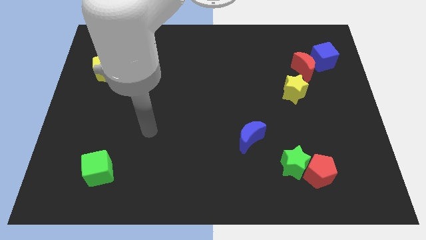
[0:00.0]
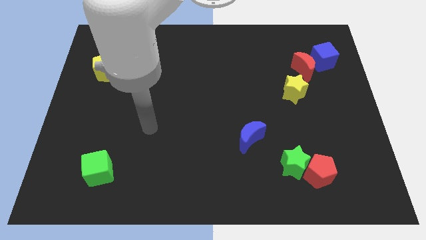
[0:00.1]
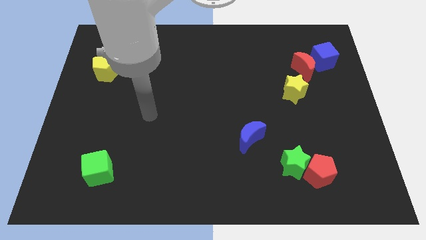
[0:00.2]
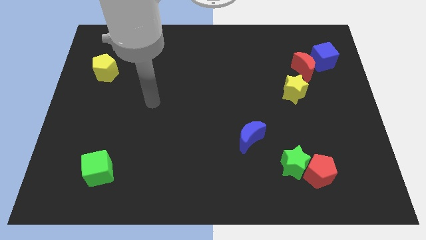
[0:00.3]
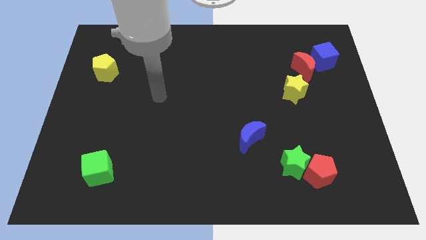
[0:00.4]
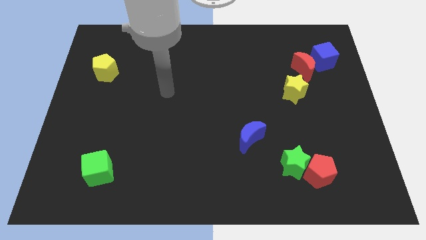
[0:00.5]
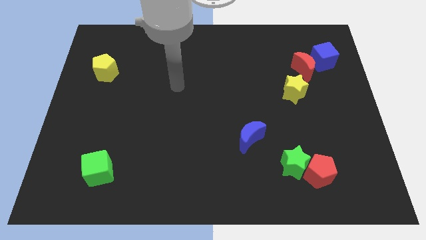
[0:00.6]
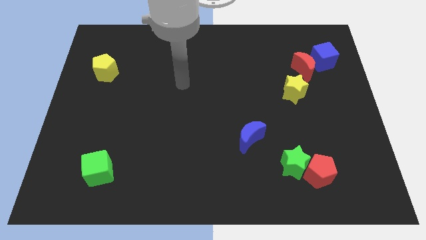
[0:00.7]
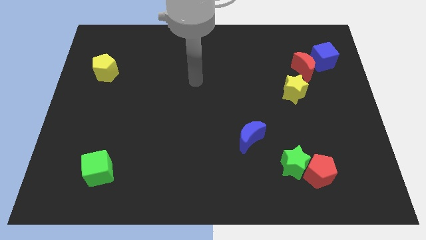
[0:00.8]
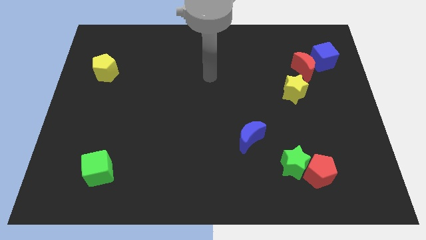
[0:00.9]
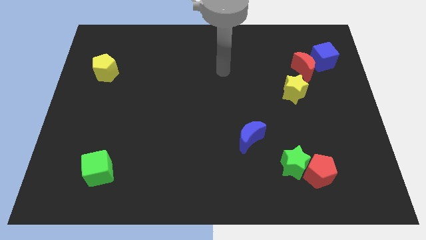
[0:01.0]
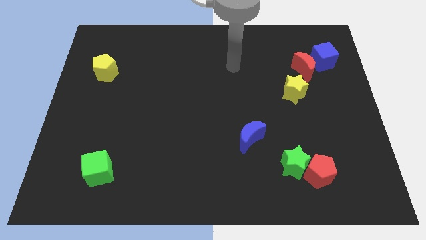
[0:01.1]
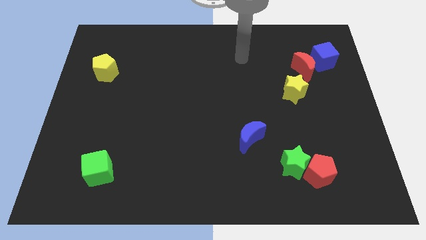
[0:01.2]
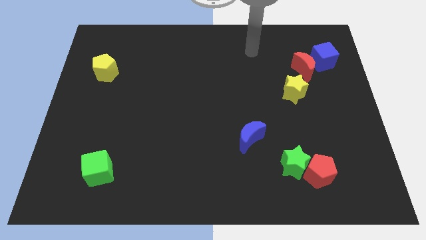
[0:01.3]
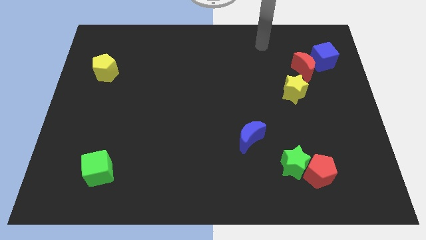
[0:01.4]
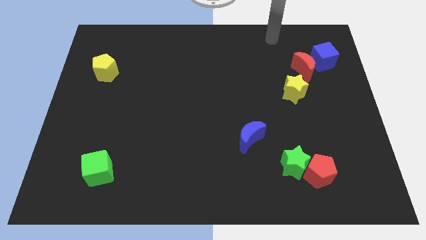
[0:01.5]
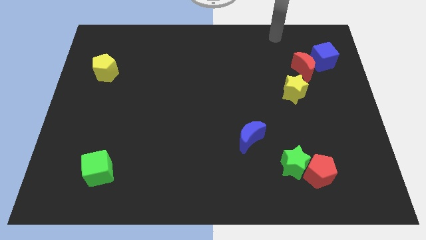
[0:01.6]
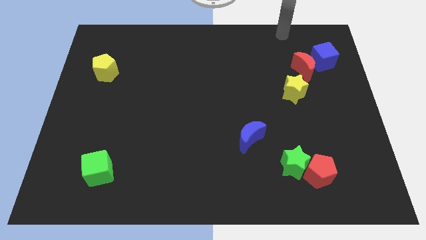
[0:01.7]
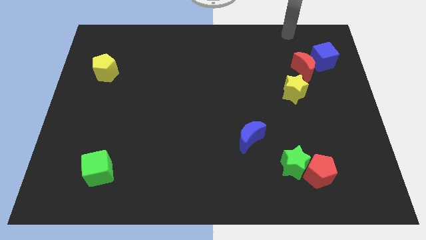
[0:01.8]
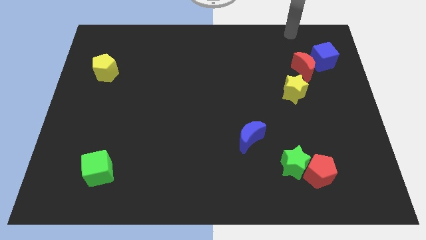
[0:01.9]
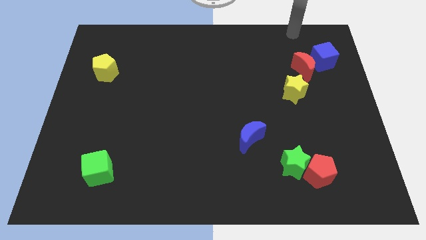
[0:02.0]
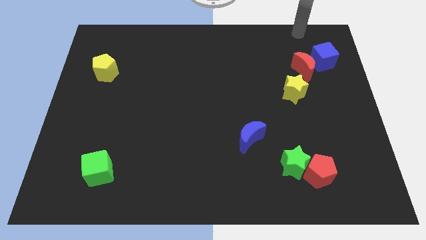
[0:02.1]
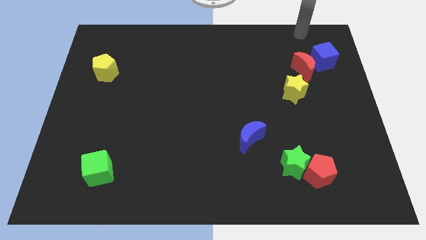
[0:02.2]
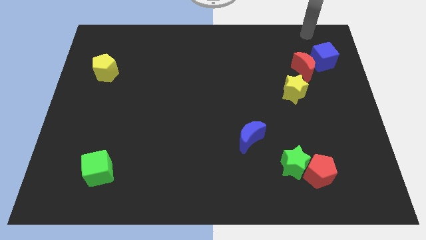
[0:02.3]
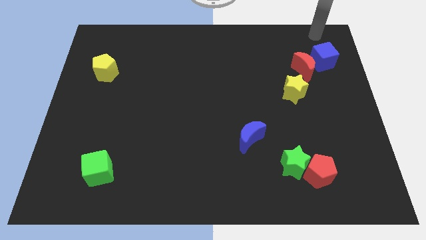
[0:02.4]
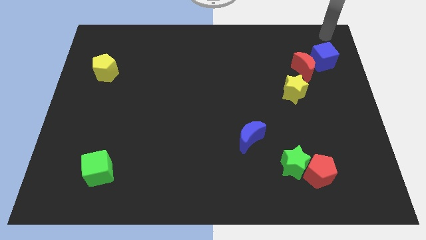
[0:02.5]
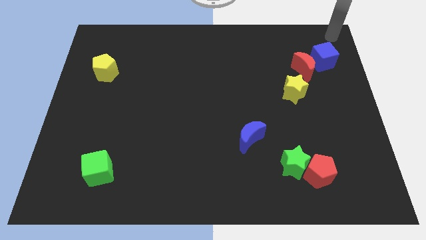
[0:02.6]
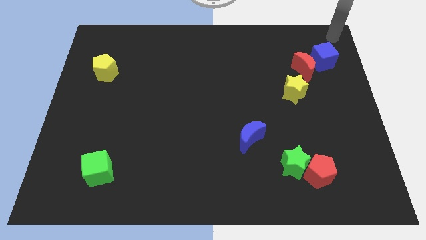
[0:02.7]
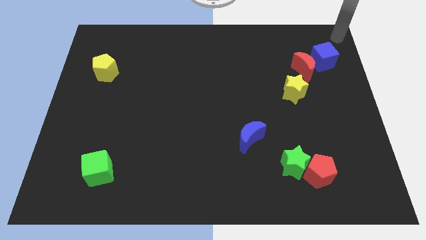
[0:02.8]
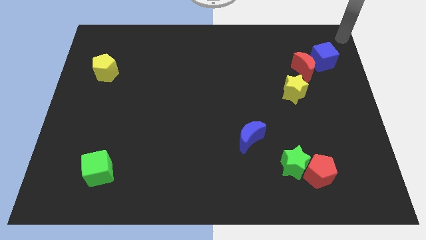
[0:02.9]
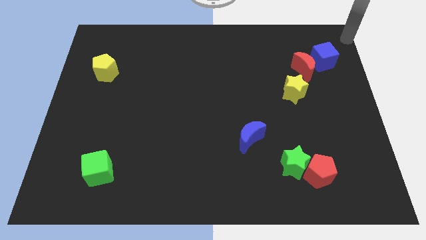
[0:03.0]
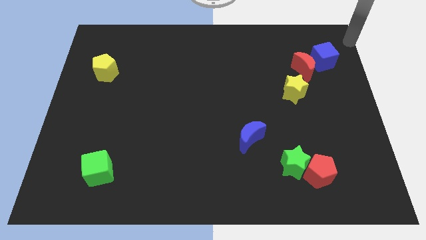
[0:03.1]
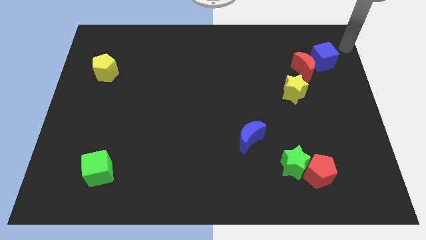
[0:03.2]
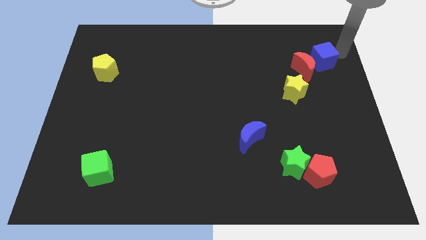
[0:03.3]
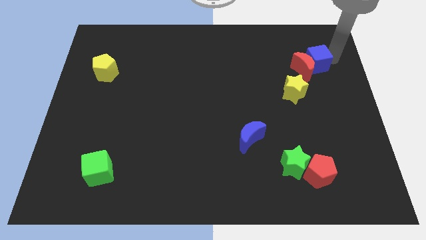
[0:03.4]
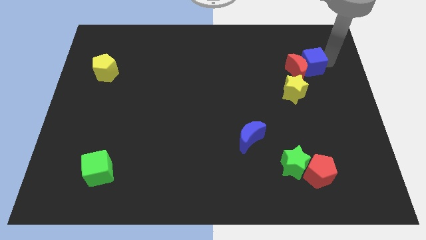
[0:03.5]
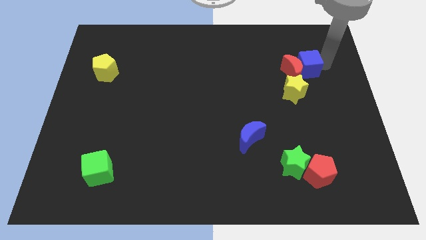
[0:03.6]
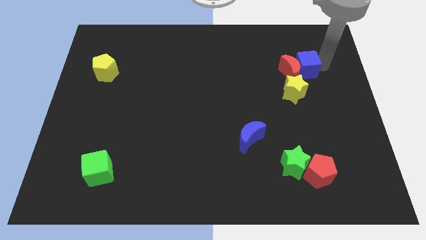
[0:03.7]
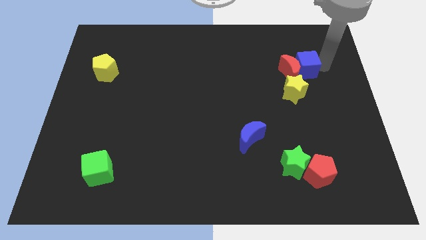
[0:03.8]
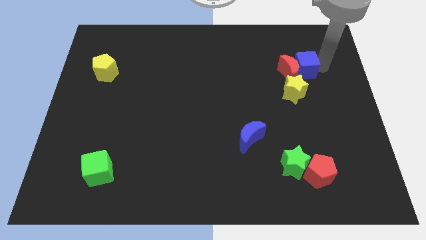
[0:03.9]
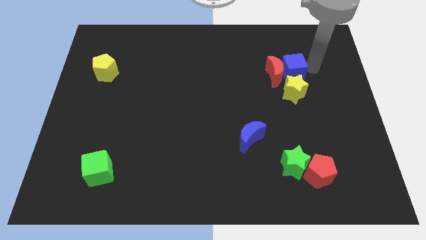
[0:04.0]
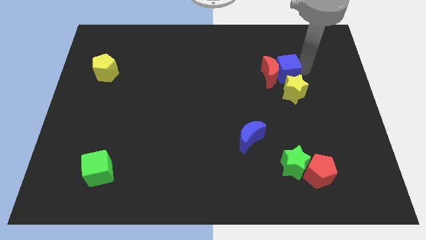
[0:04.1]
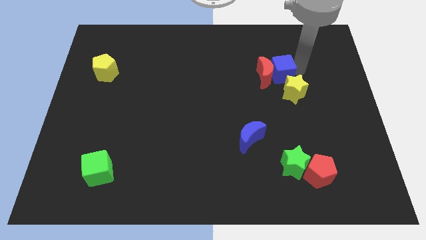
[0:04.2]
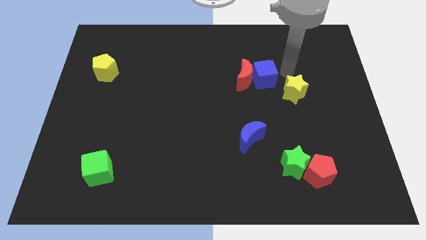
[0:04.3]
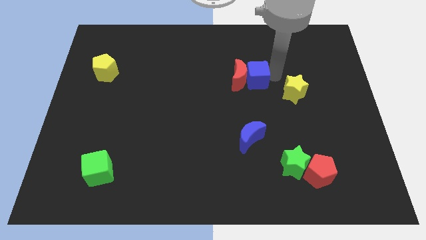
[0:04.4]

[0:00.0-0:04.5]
move the blue cube to left of the board

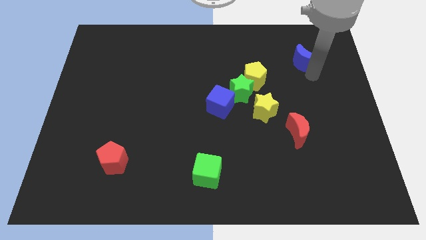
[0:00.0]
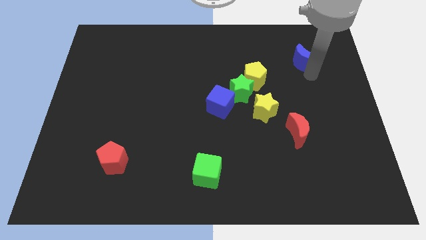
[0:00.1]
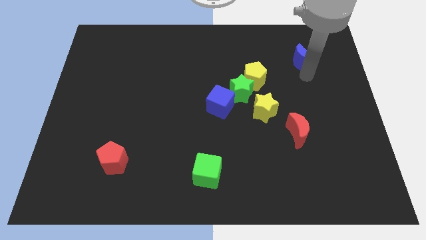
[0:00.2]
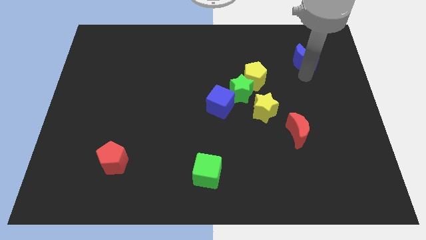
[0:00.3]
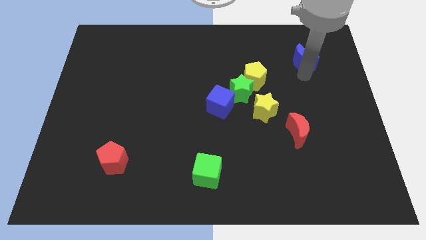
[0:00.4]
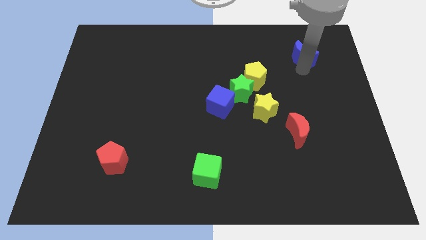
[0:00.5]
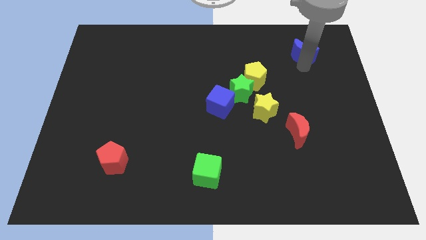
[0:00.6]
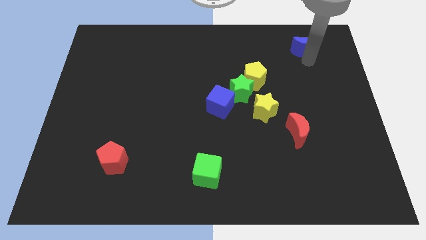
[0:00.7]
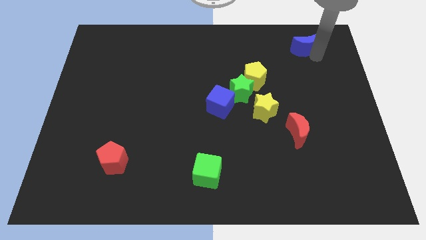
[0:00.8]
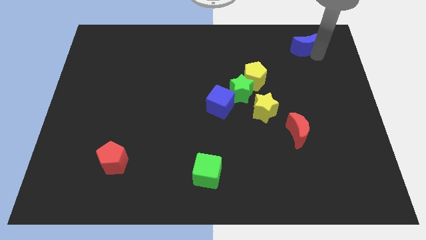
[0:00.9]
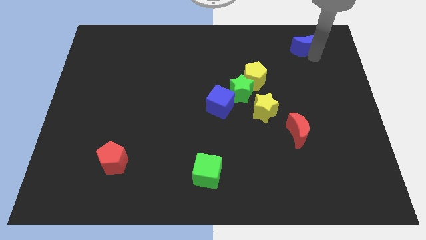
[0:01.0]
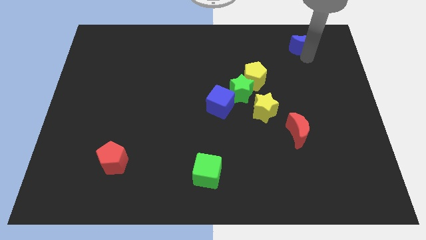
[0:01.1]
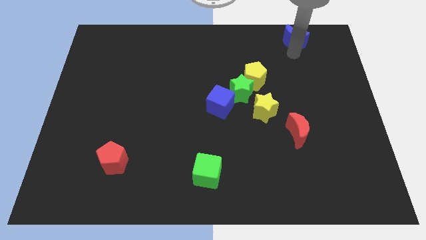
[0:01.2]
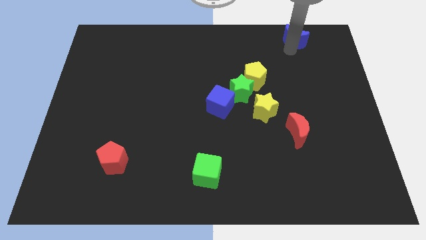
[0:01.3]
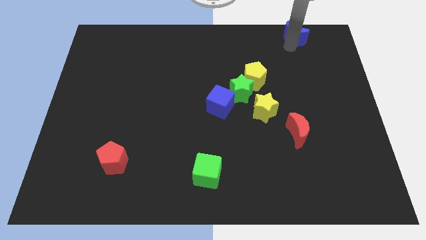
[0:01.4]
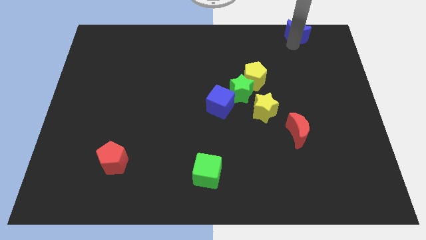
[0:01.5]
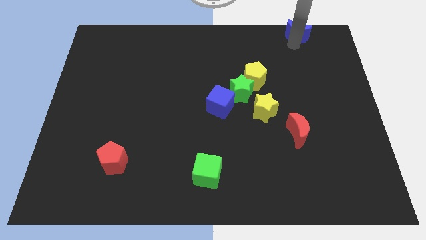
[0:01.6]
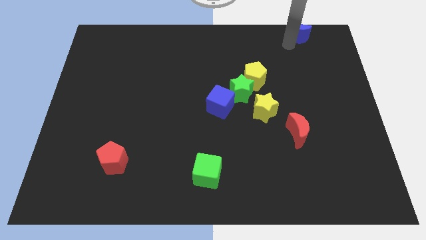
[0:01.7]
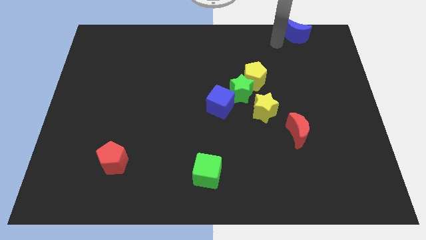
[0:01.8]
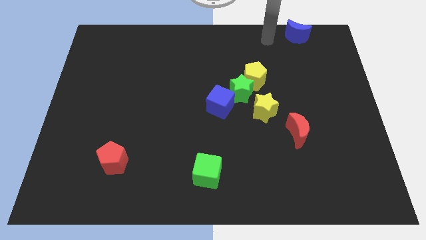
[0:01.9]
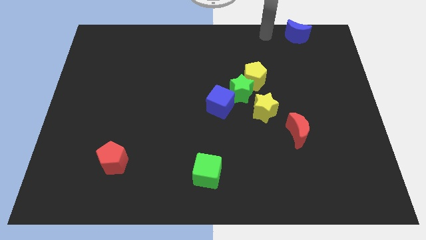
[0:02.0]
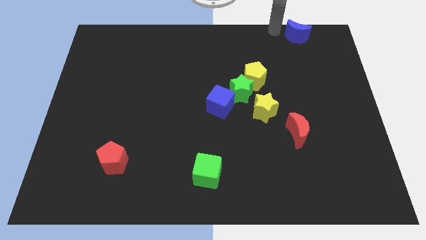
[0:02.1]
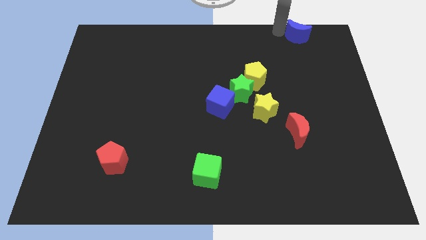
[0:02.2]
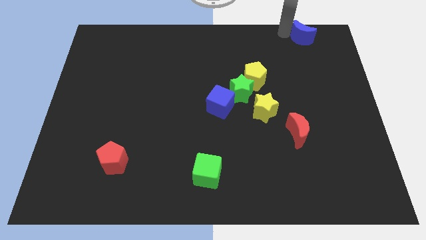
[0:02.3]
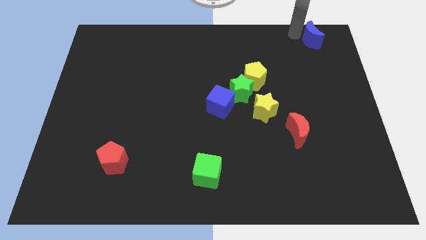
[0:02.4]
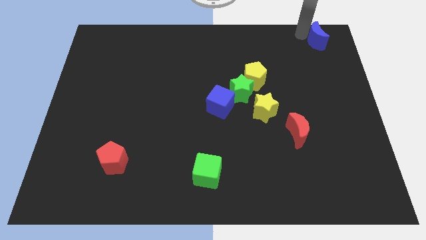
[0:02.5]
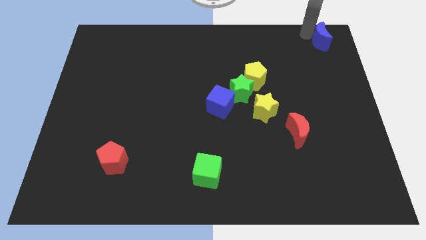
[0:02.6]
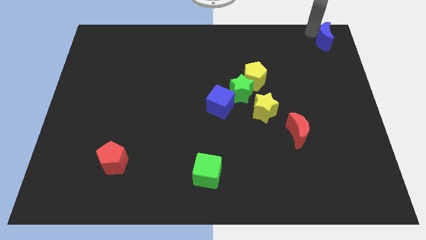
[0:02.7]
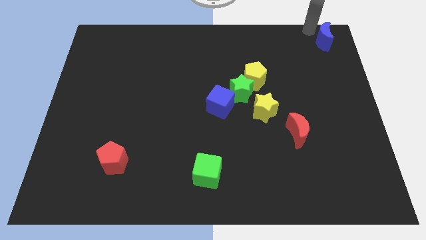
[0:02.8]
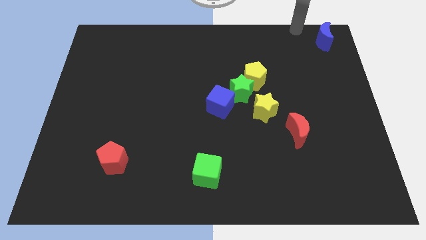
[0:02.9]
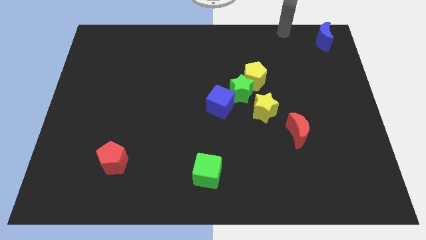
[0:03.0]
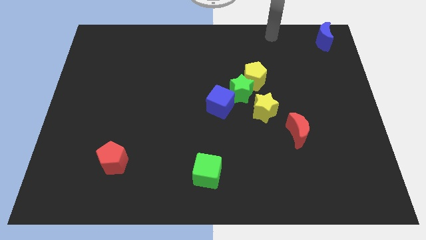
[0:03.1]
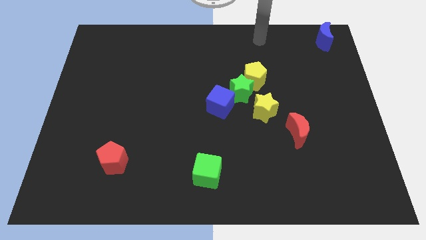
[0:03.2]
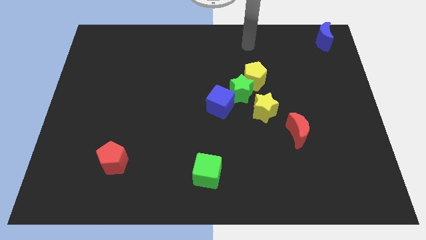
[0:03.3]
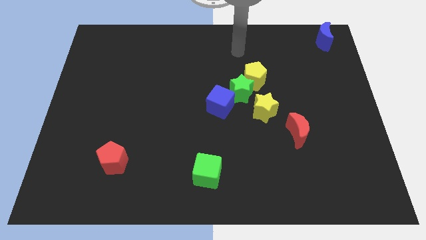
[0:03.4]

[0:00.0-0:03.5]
place the blue crescent at the top right corner of the board

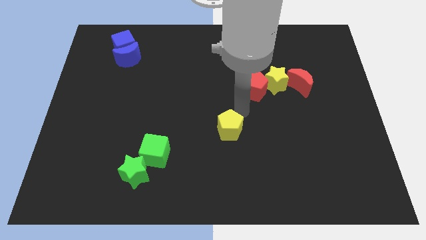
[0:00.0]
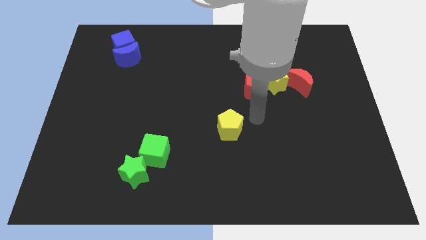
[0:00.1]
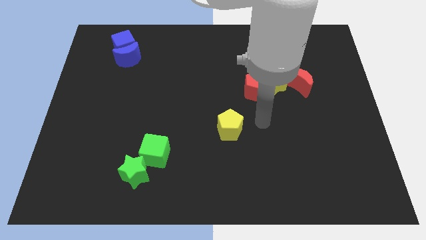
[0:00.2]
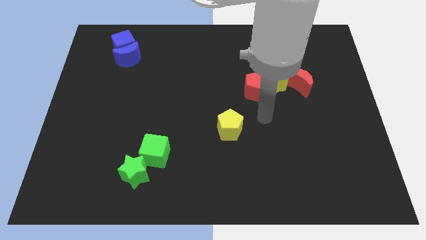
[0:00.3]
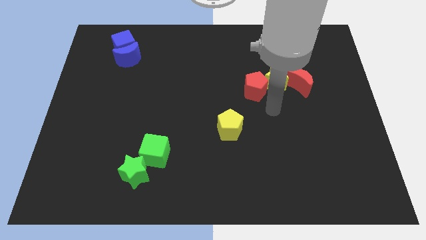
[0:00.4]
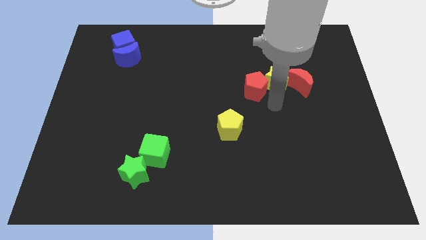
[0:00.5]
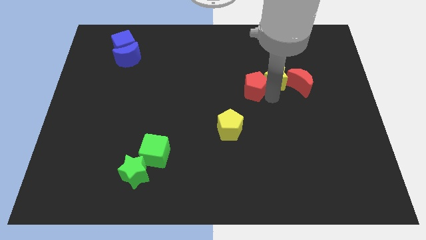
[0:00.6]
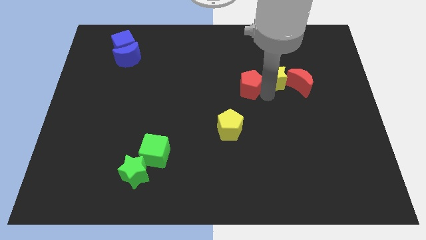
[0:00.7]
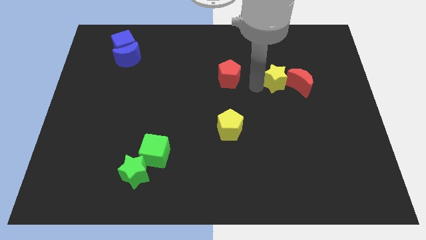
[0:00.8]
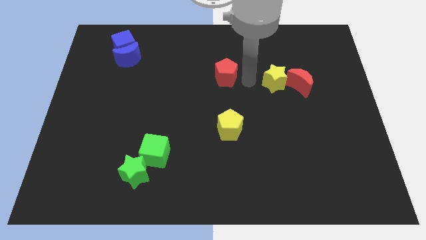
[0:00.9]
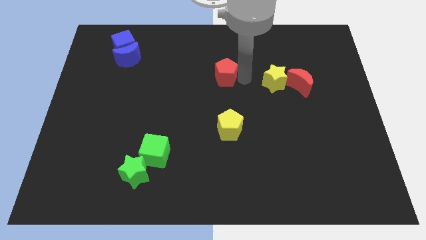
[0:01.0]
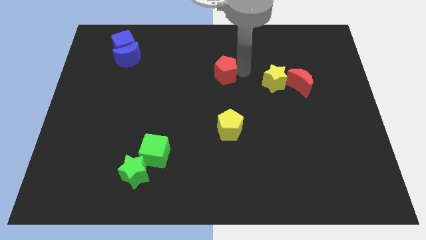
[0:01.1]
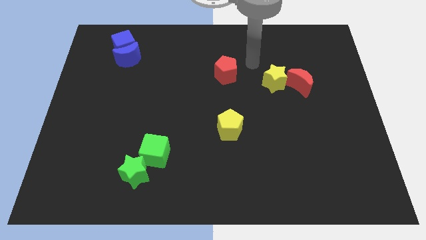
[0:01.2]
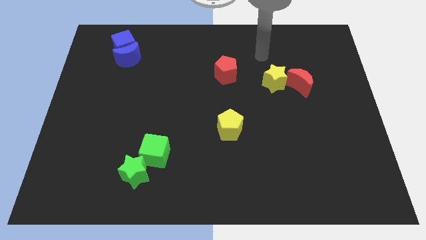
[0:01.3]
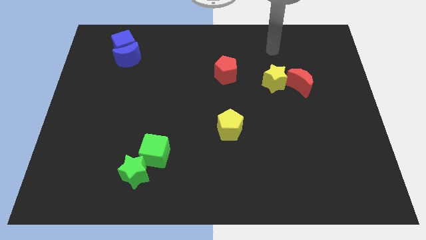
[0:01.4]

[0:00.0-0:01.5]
push the red pentagon towards the top side
